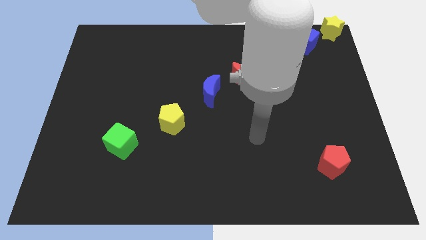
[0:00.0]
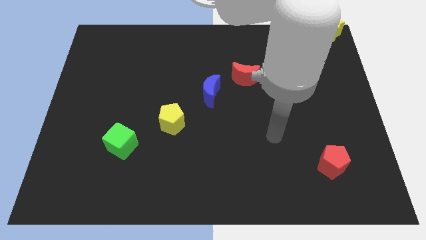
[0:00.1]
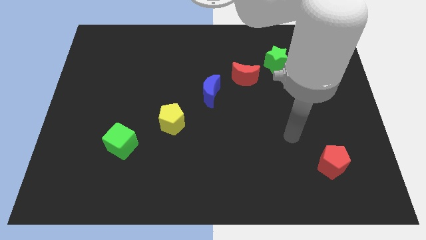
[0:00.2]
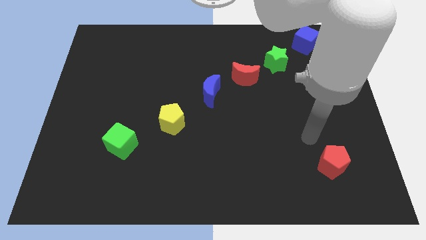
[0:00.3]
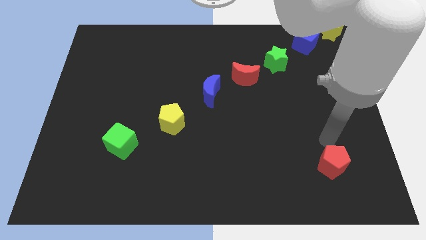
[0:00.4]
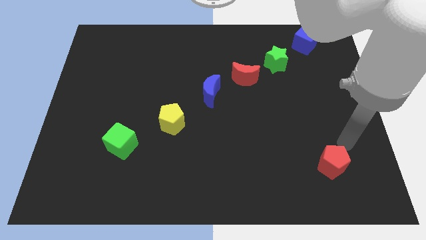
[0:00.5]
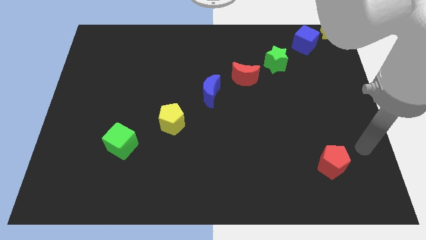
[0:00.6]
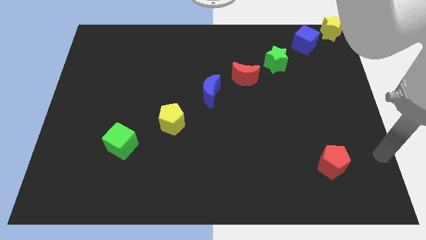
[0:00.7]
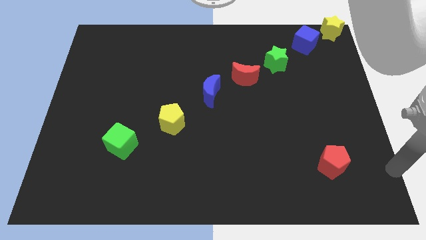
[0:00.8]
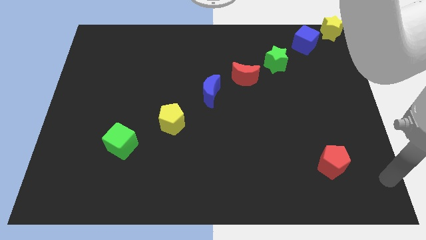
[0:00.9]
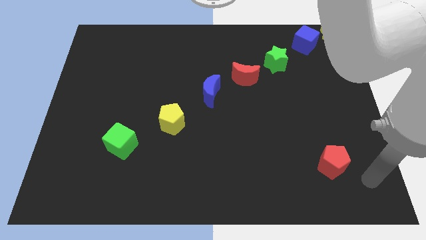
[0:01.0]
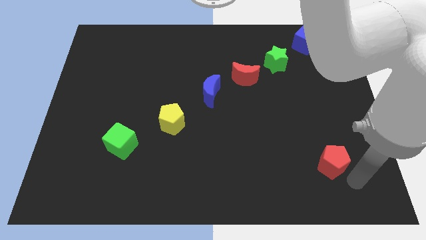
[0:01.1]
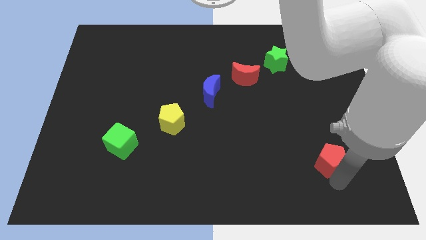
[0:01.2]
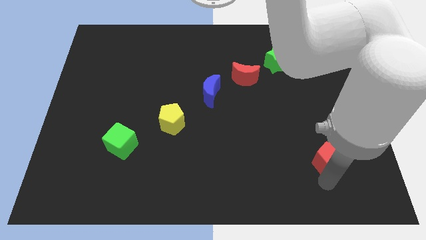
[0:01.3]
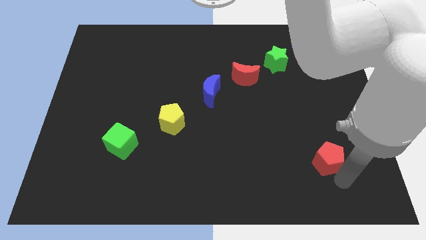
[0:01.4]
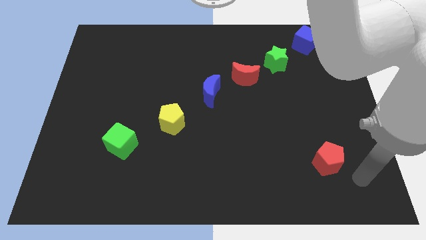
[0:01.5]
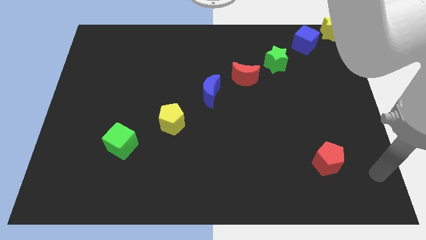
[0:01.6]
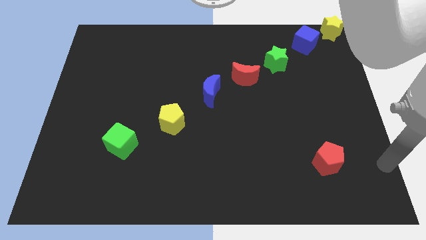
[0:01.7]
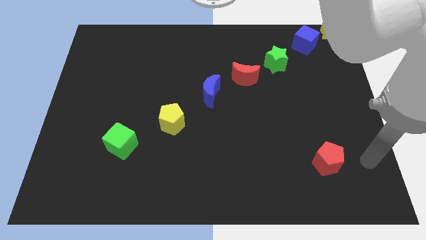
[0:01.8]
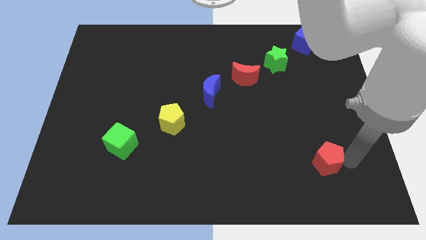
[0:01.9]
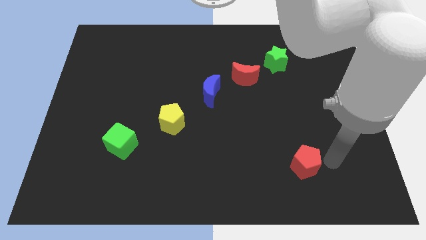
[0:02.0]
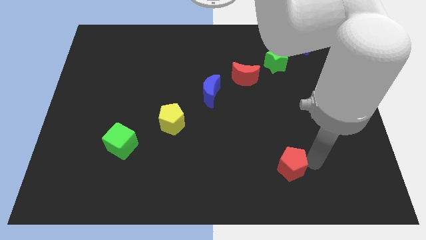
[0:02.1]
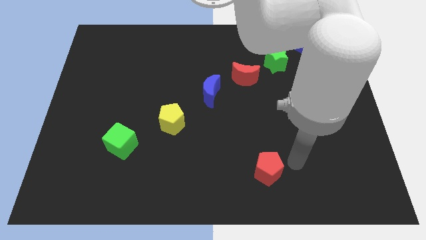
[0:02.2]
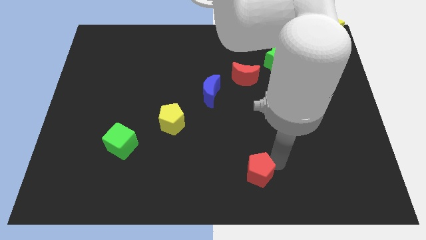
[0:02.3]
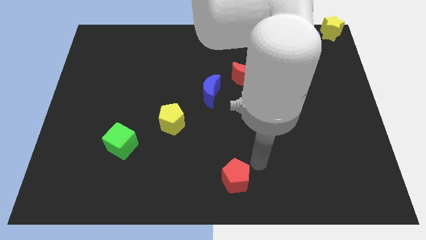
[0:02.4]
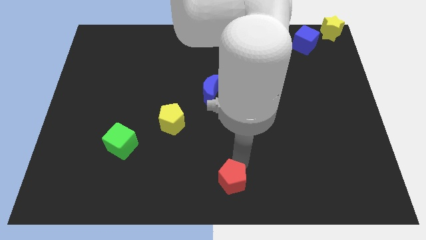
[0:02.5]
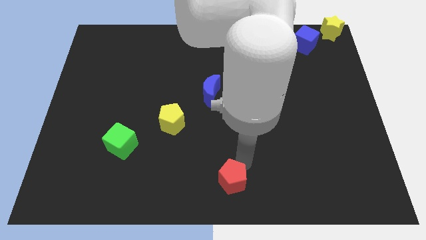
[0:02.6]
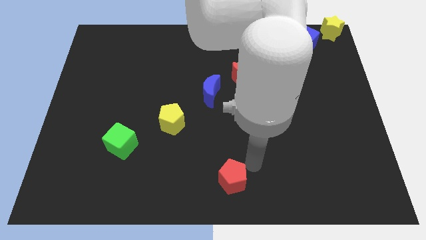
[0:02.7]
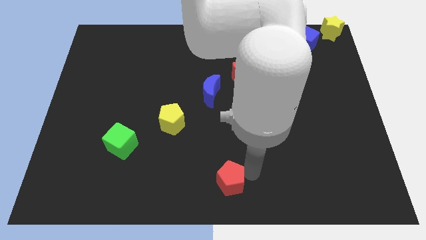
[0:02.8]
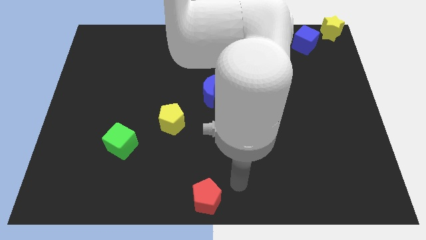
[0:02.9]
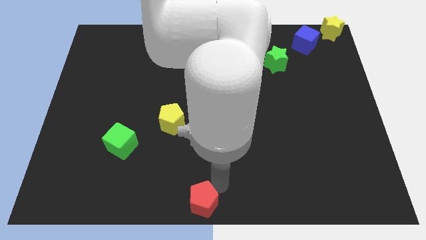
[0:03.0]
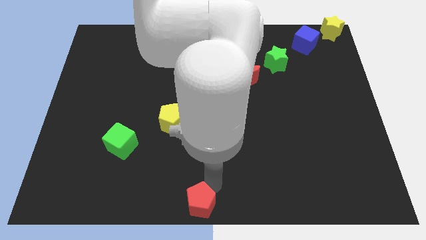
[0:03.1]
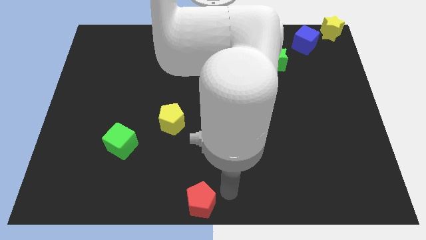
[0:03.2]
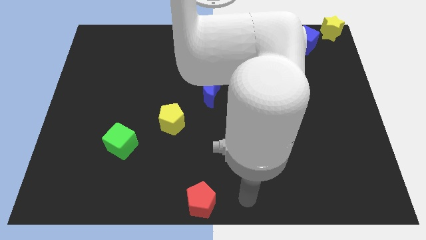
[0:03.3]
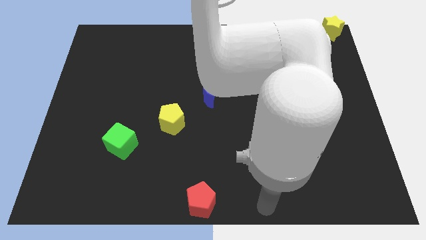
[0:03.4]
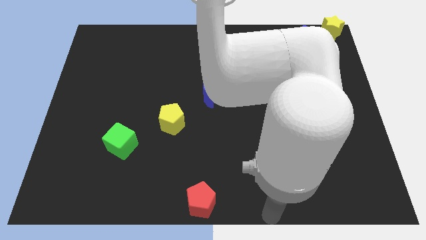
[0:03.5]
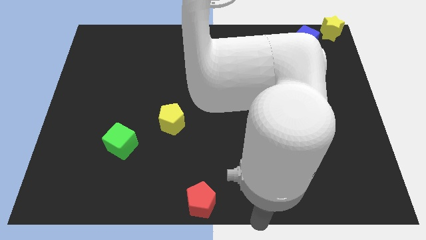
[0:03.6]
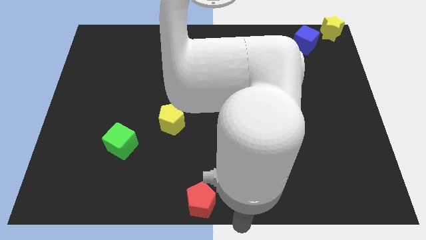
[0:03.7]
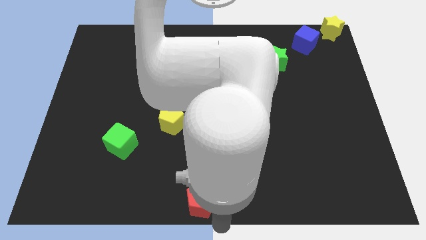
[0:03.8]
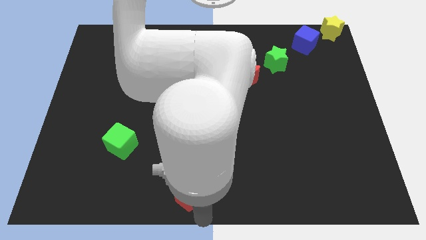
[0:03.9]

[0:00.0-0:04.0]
place the red pentagon to the center bottom of the board

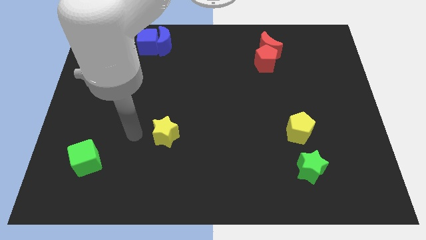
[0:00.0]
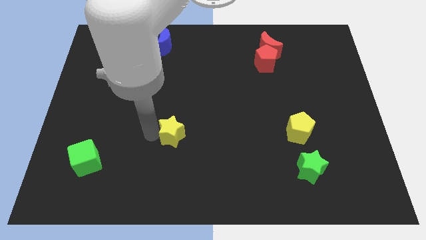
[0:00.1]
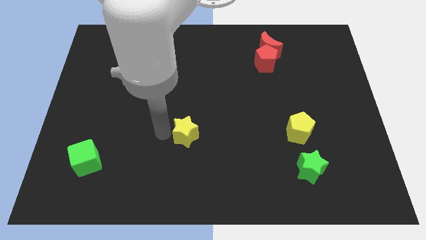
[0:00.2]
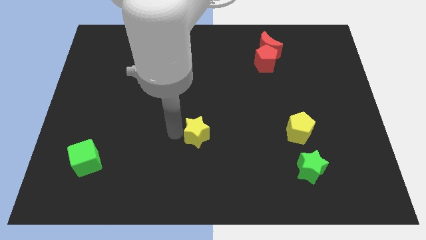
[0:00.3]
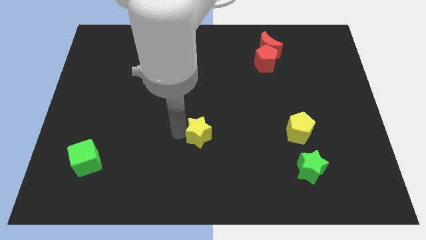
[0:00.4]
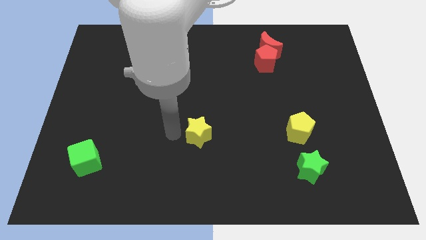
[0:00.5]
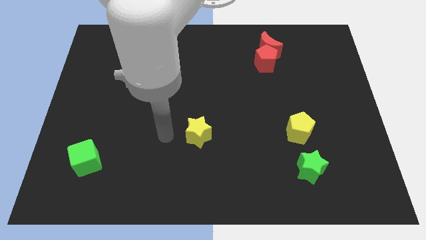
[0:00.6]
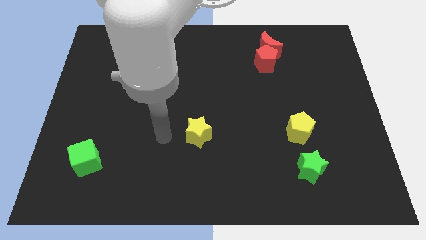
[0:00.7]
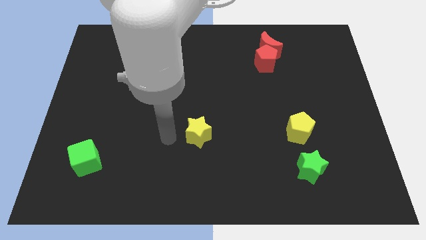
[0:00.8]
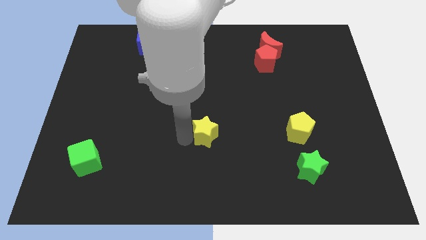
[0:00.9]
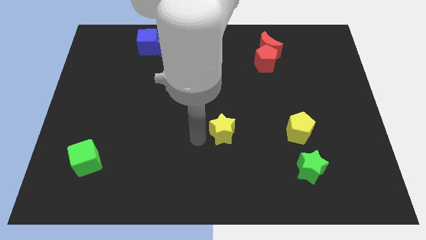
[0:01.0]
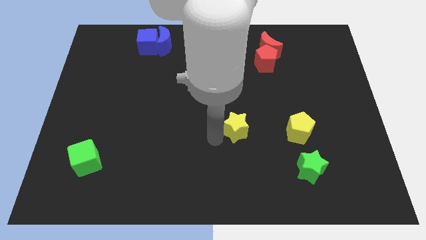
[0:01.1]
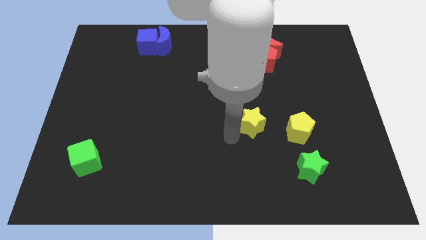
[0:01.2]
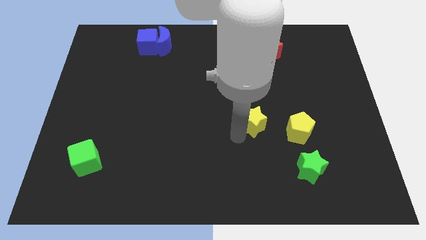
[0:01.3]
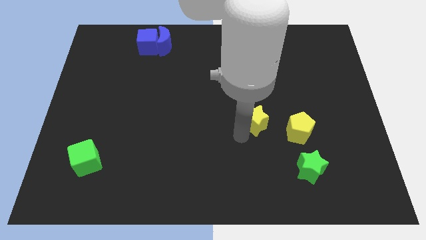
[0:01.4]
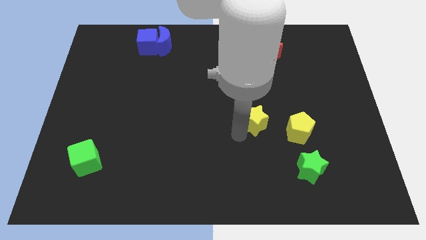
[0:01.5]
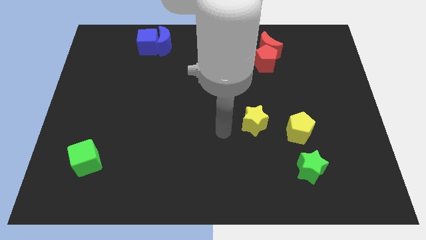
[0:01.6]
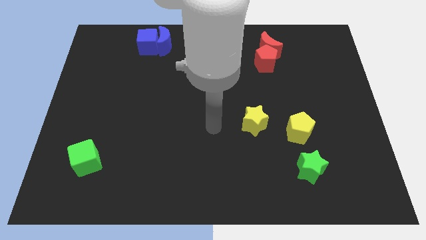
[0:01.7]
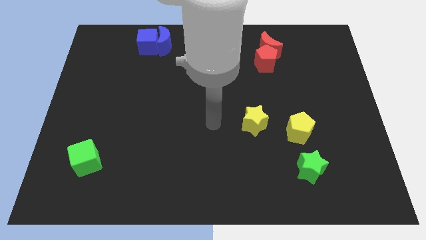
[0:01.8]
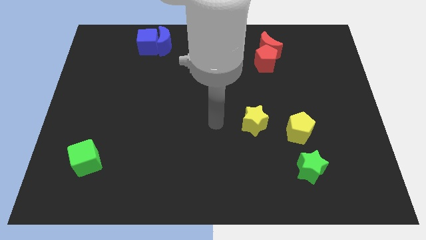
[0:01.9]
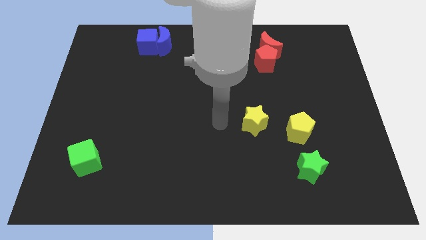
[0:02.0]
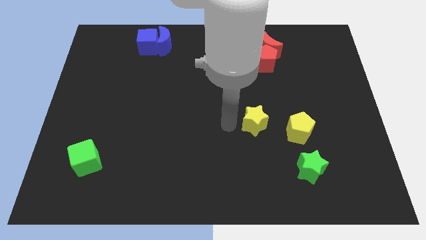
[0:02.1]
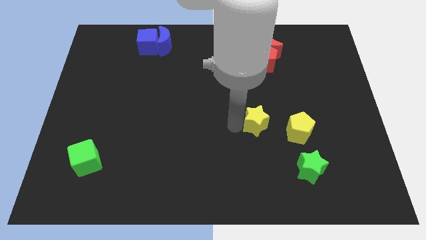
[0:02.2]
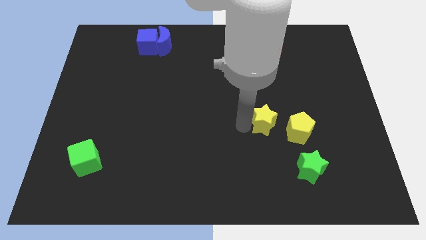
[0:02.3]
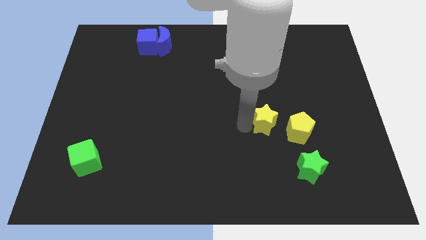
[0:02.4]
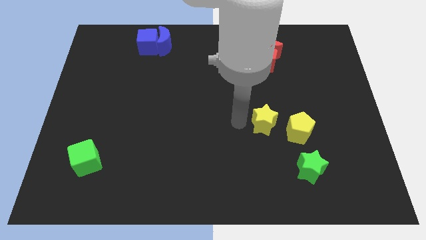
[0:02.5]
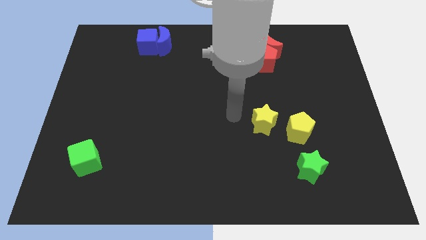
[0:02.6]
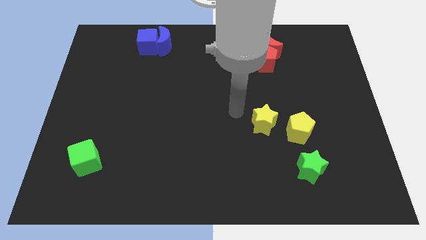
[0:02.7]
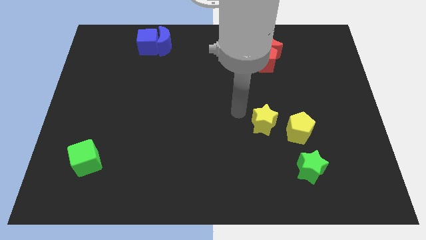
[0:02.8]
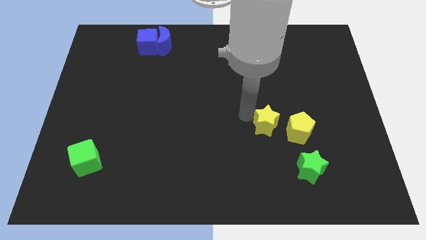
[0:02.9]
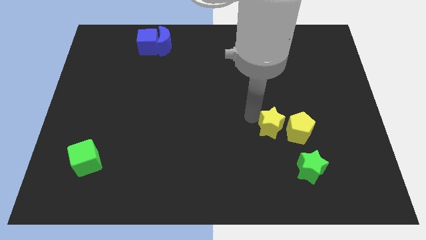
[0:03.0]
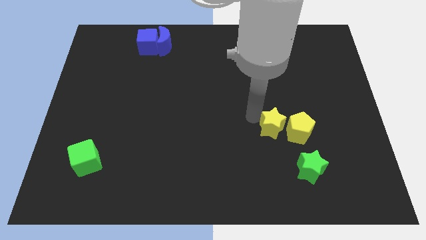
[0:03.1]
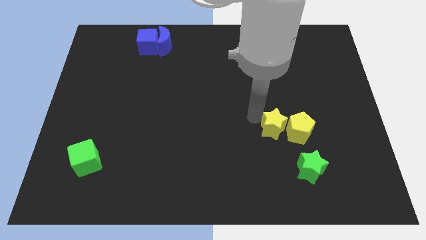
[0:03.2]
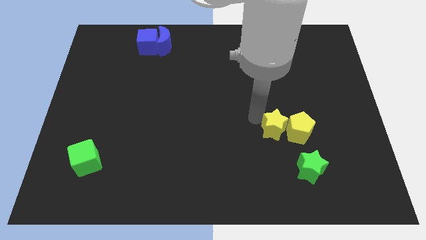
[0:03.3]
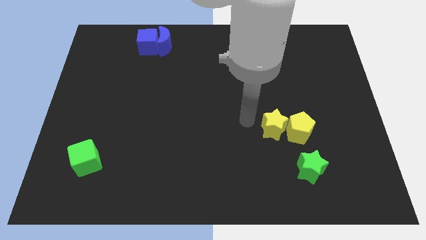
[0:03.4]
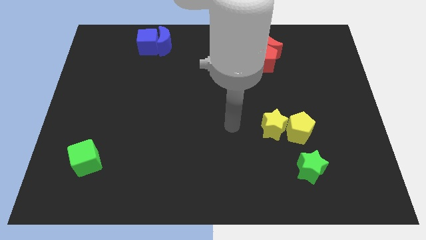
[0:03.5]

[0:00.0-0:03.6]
slide yellow star towards yellow pentagon

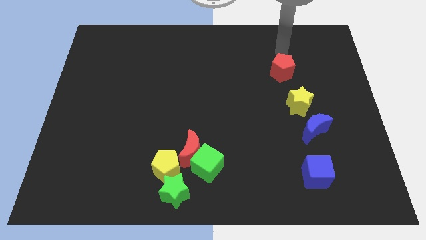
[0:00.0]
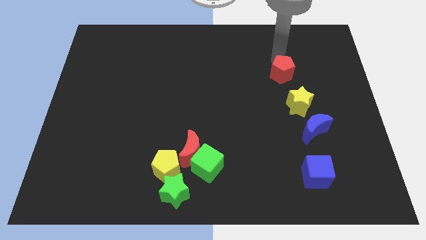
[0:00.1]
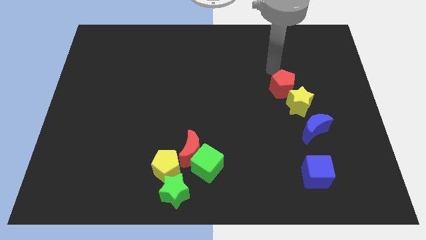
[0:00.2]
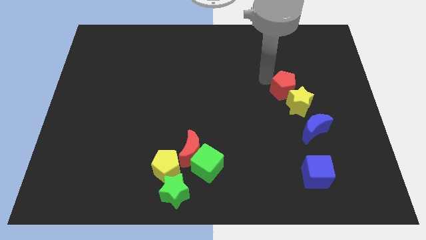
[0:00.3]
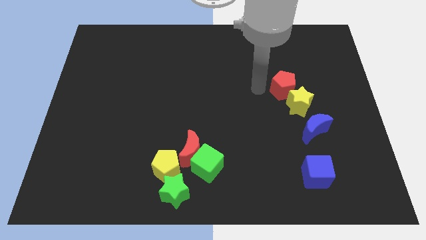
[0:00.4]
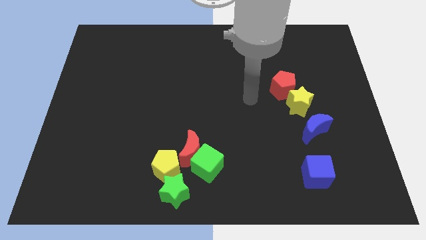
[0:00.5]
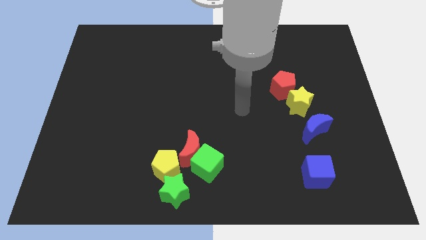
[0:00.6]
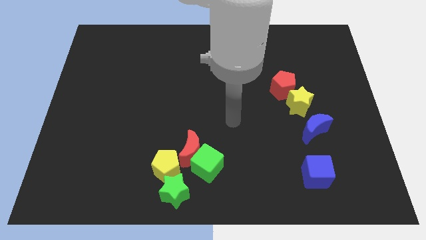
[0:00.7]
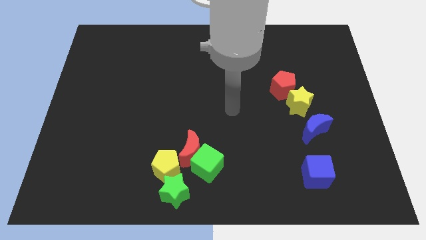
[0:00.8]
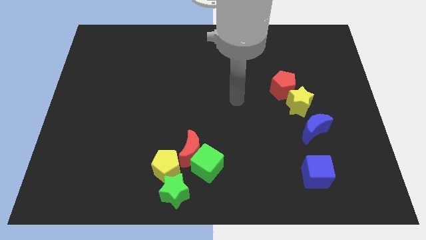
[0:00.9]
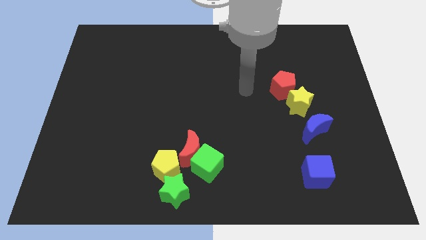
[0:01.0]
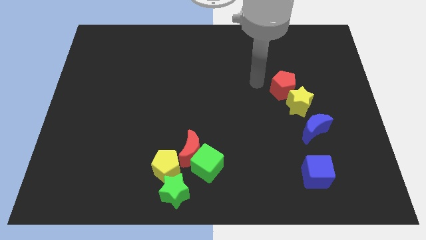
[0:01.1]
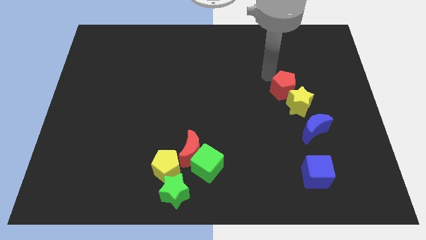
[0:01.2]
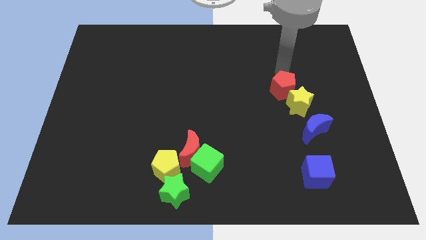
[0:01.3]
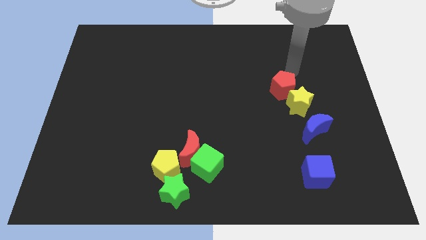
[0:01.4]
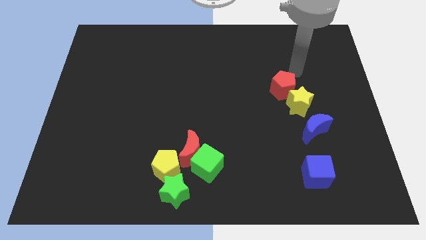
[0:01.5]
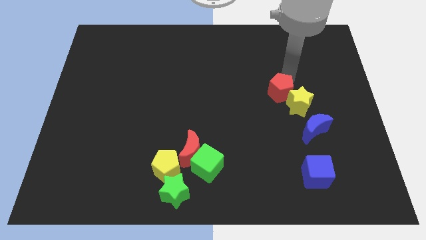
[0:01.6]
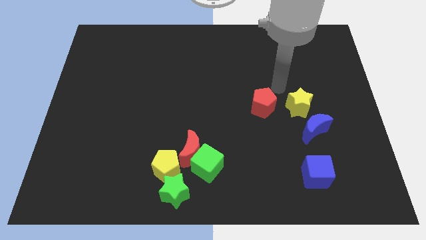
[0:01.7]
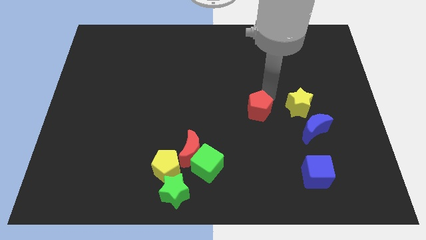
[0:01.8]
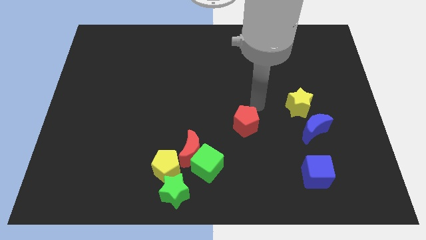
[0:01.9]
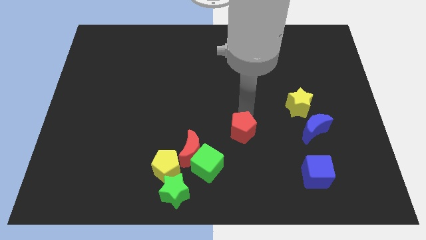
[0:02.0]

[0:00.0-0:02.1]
place the red pentagon diagonally right above green cube
